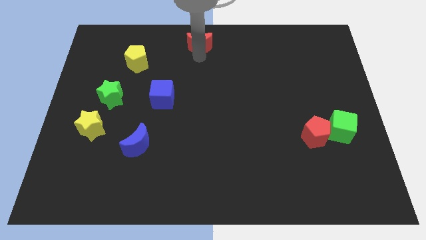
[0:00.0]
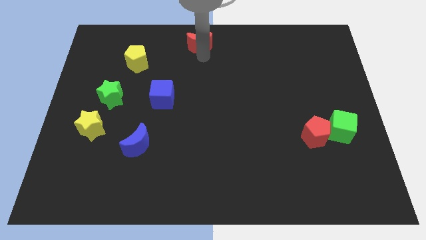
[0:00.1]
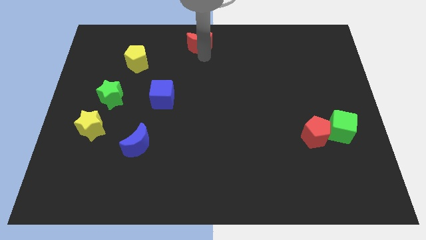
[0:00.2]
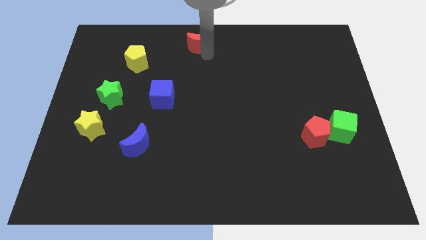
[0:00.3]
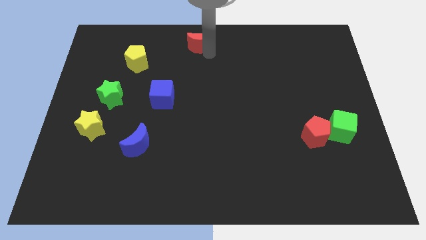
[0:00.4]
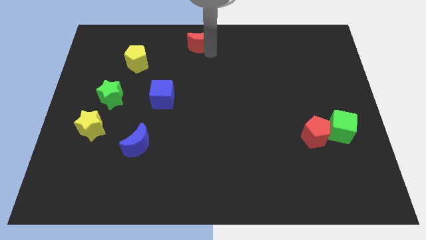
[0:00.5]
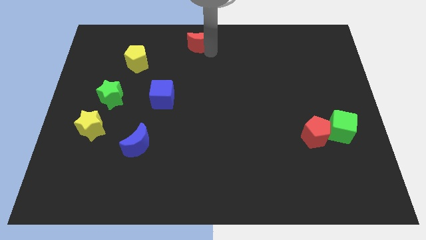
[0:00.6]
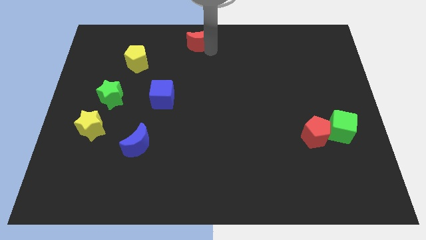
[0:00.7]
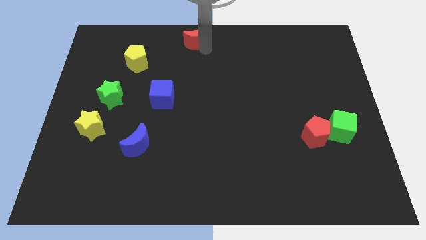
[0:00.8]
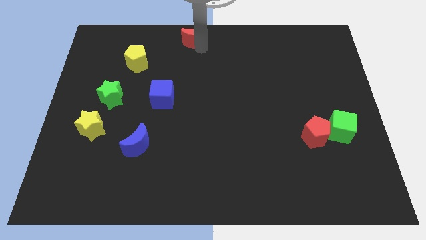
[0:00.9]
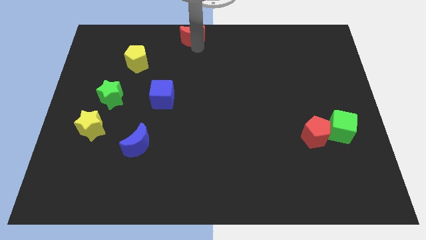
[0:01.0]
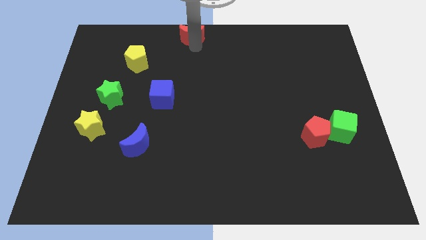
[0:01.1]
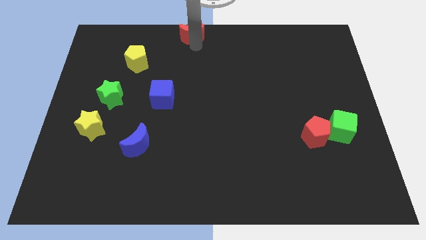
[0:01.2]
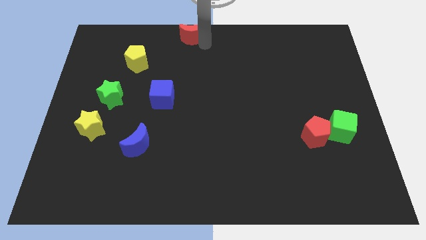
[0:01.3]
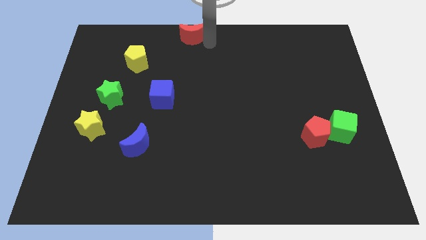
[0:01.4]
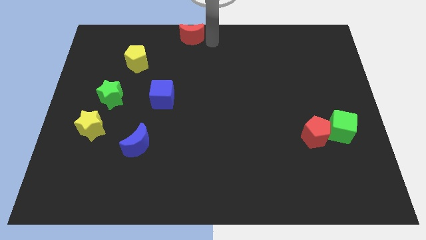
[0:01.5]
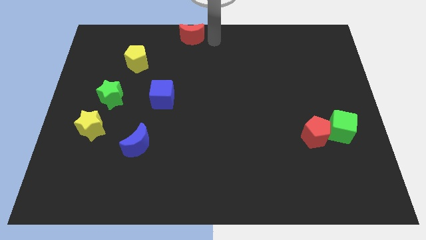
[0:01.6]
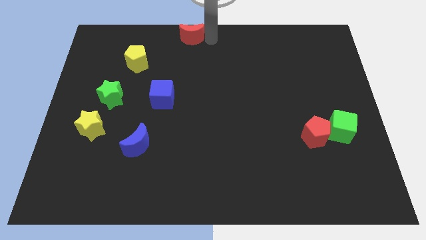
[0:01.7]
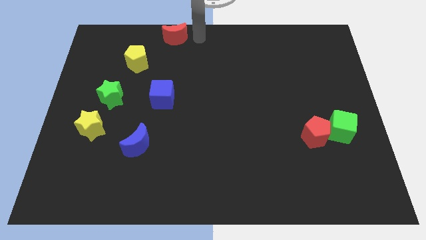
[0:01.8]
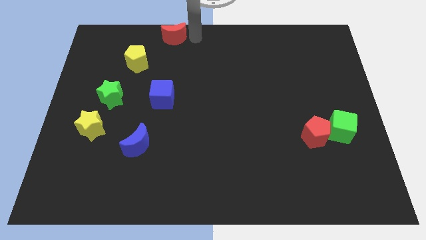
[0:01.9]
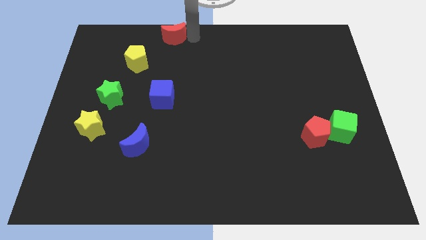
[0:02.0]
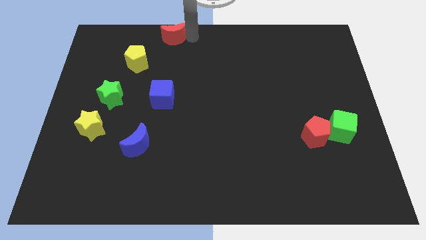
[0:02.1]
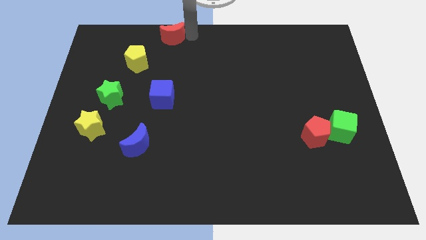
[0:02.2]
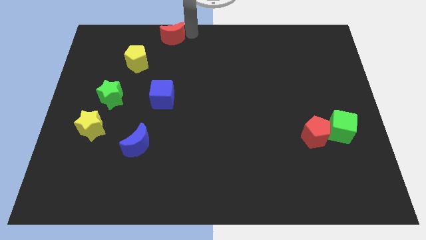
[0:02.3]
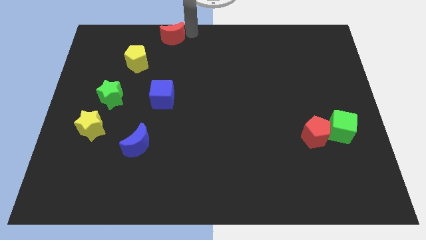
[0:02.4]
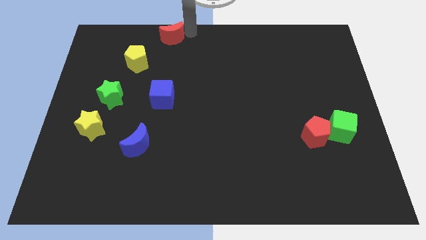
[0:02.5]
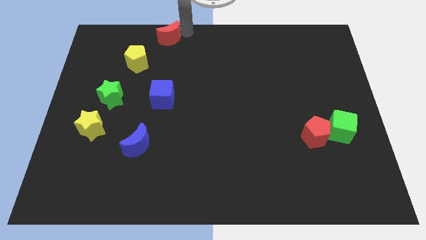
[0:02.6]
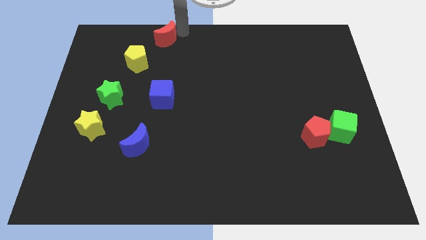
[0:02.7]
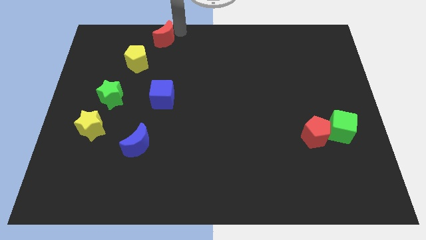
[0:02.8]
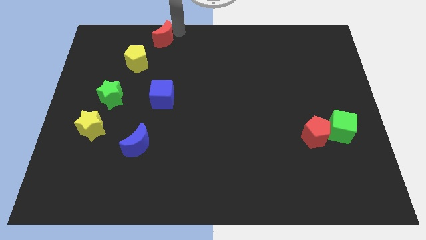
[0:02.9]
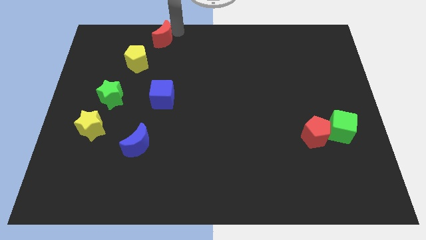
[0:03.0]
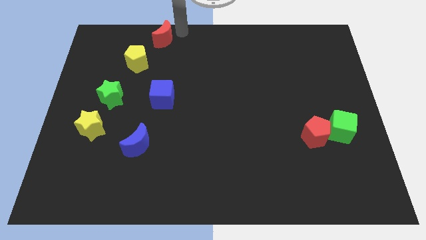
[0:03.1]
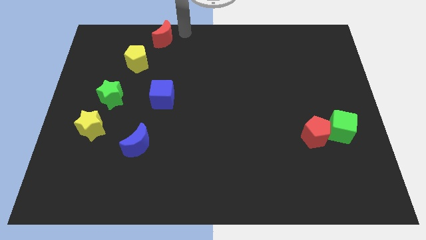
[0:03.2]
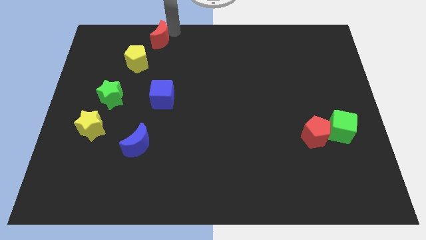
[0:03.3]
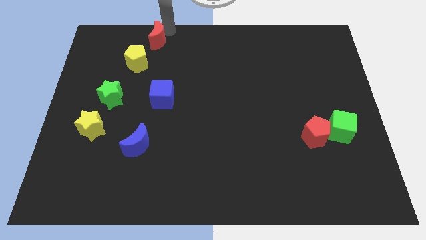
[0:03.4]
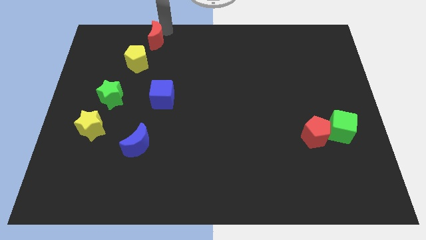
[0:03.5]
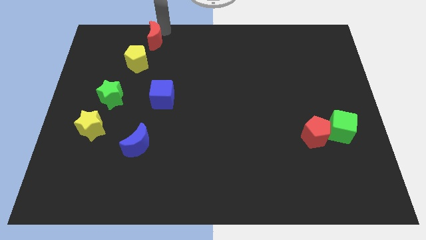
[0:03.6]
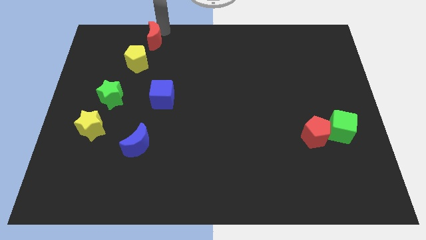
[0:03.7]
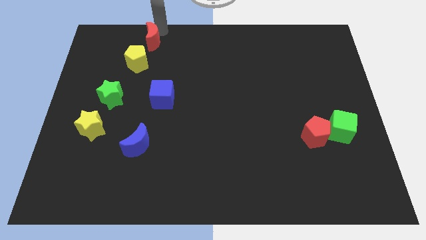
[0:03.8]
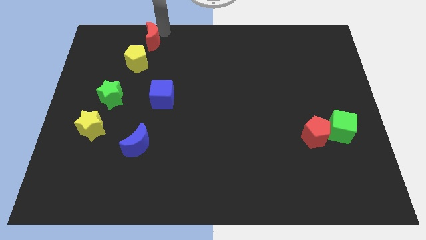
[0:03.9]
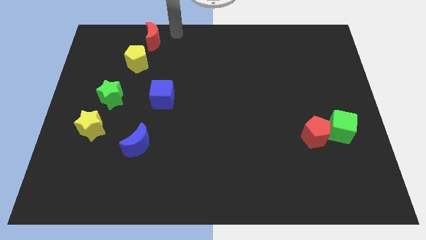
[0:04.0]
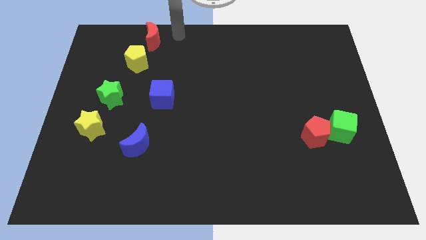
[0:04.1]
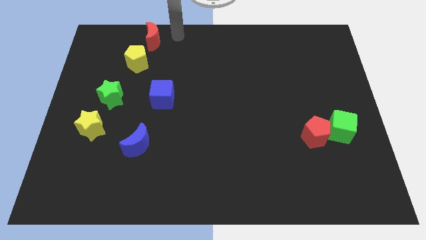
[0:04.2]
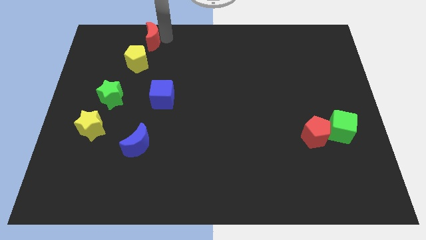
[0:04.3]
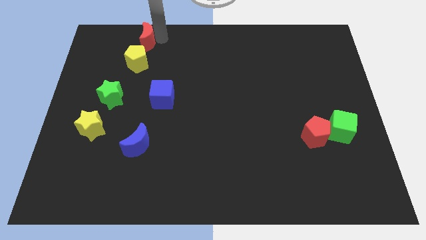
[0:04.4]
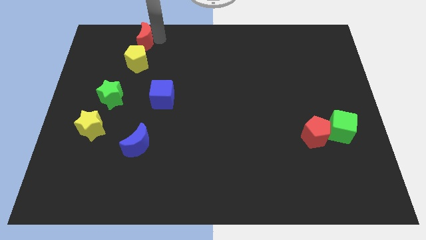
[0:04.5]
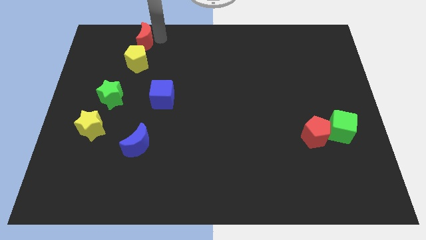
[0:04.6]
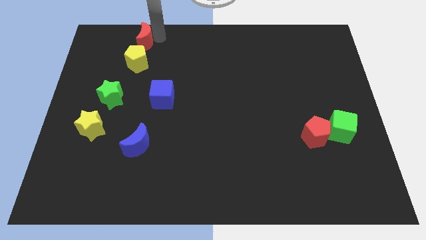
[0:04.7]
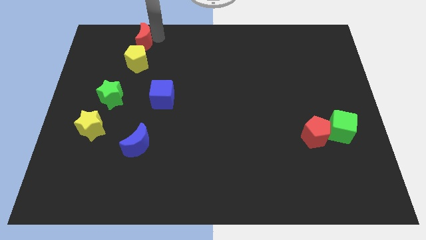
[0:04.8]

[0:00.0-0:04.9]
place the red moon to the top of the yellow pentagon

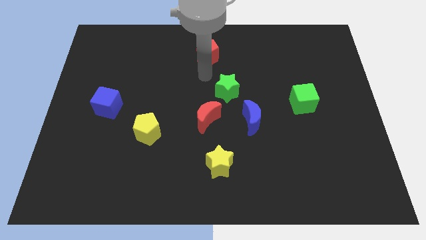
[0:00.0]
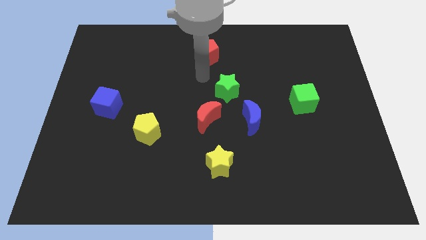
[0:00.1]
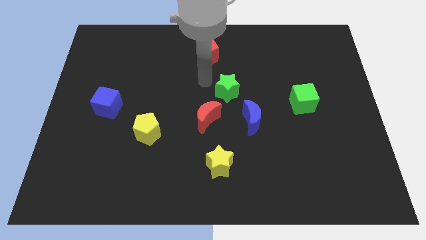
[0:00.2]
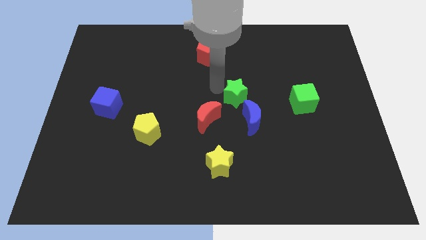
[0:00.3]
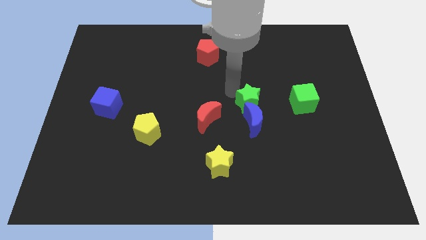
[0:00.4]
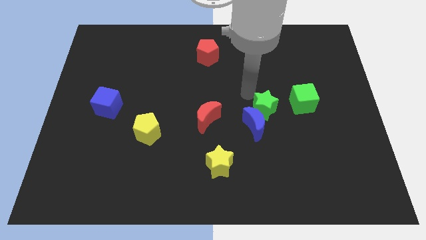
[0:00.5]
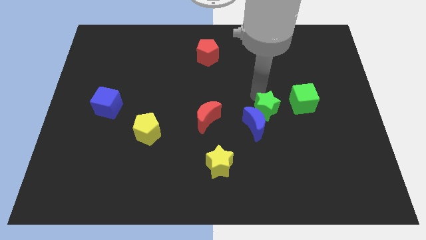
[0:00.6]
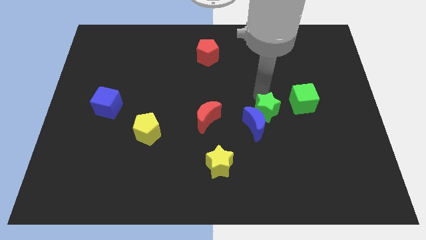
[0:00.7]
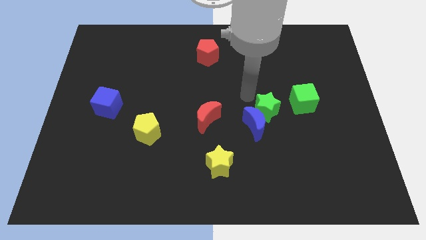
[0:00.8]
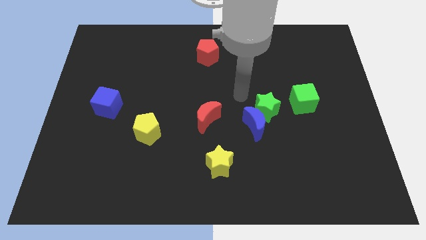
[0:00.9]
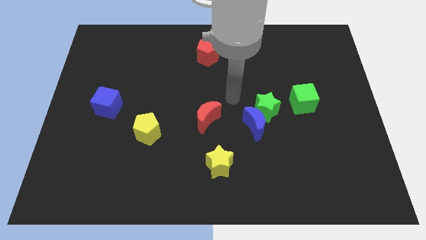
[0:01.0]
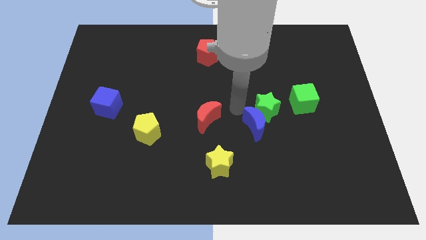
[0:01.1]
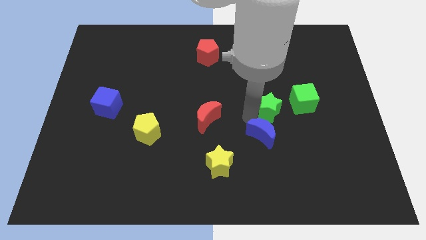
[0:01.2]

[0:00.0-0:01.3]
push the green star into blue crescent

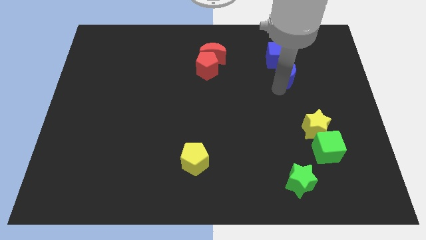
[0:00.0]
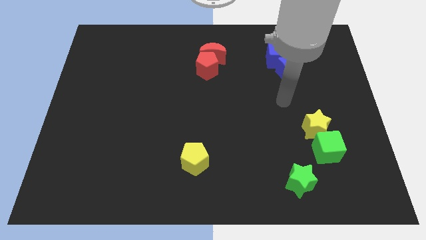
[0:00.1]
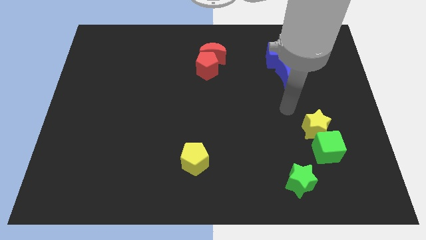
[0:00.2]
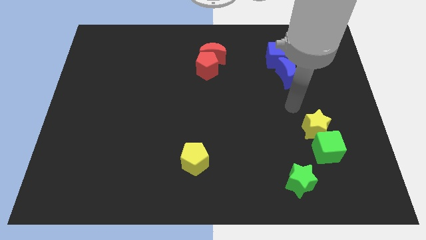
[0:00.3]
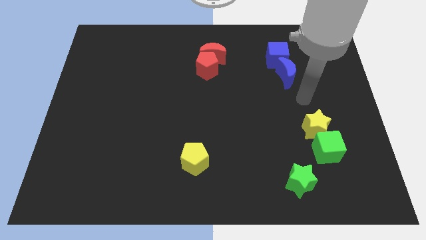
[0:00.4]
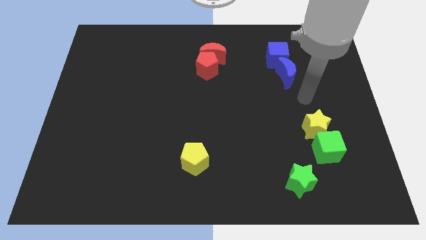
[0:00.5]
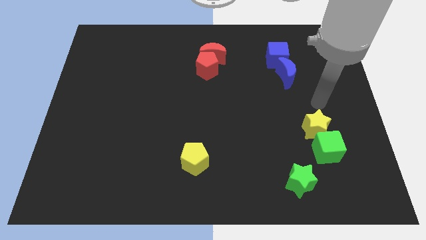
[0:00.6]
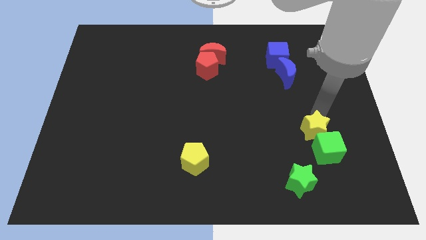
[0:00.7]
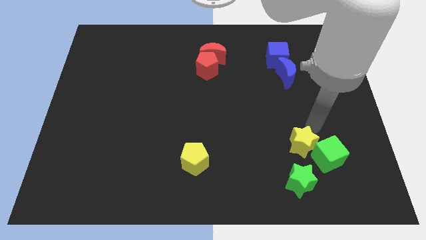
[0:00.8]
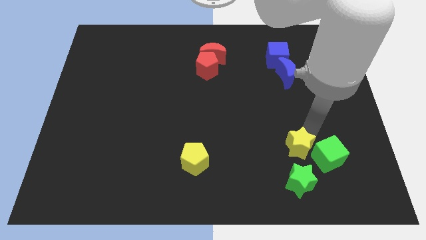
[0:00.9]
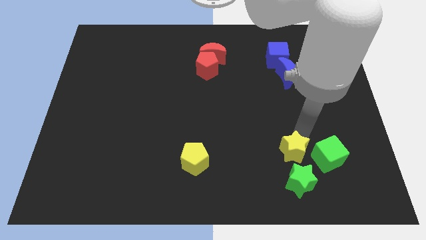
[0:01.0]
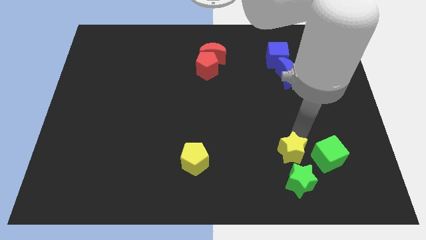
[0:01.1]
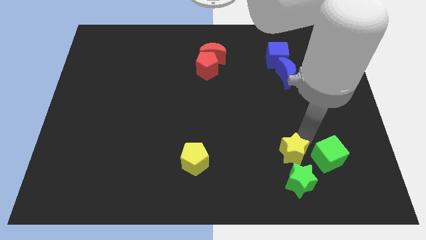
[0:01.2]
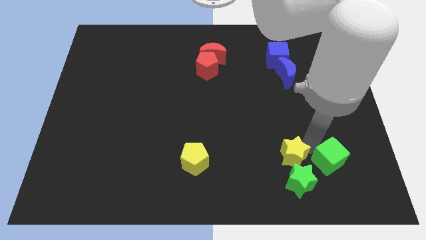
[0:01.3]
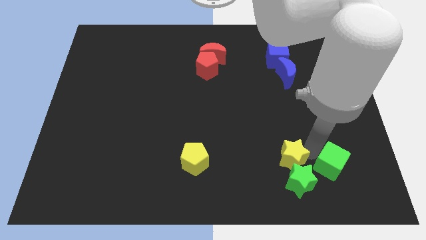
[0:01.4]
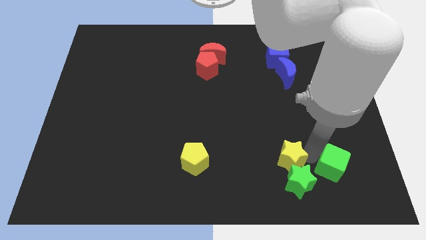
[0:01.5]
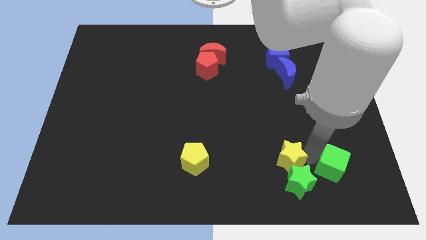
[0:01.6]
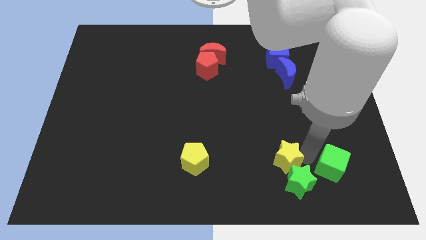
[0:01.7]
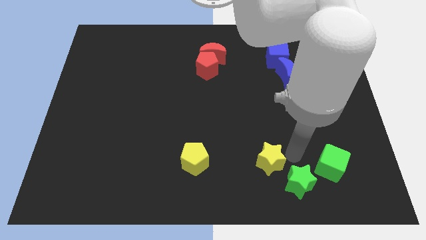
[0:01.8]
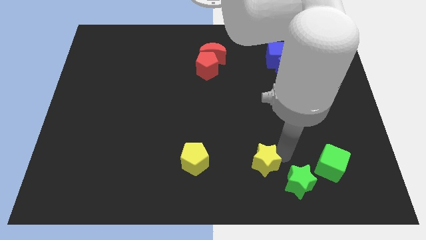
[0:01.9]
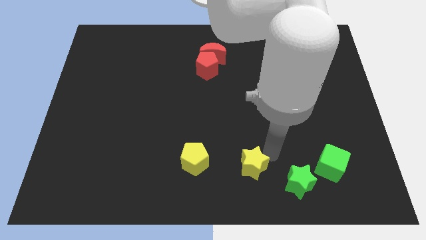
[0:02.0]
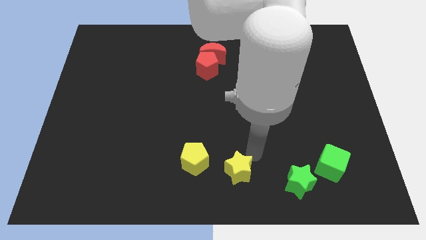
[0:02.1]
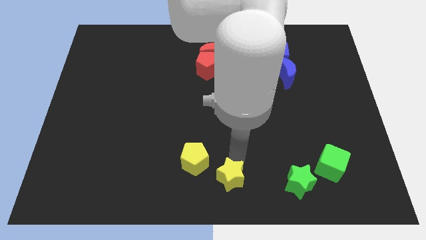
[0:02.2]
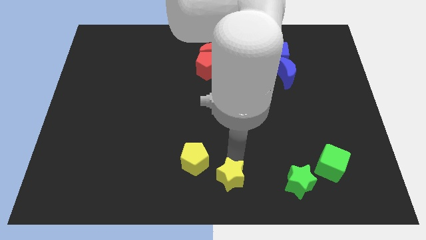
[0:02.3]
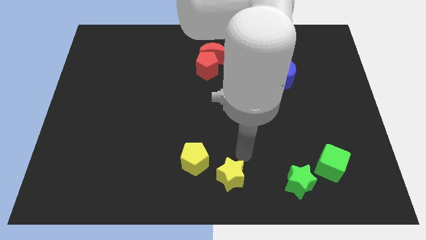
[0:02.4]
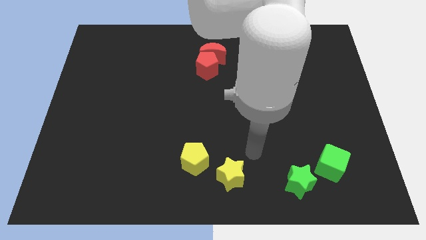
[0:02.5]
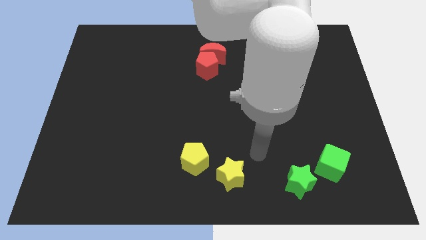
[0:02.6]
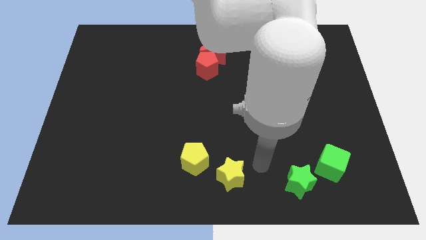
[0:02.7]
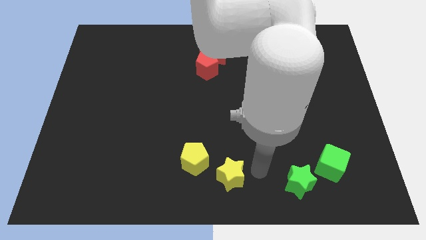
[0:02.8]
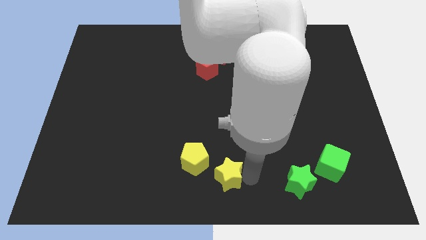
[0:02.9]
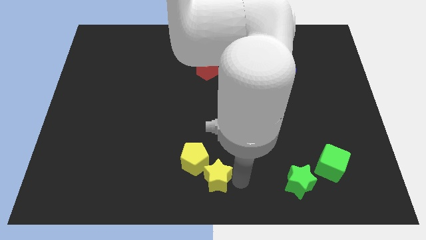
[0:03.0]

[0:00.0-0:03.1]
push the yellow star towards the bottom side
